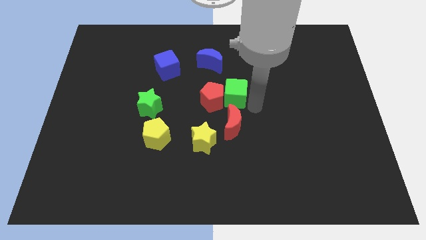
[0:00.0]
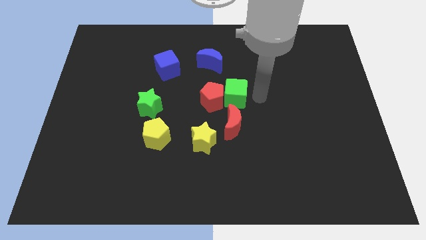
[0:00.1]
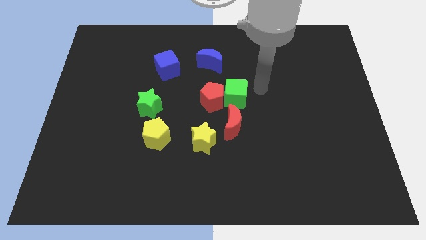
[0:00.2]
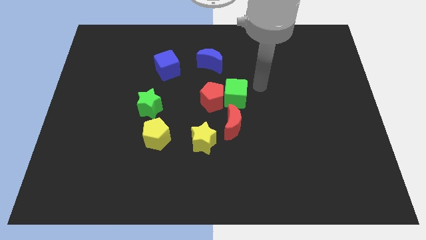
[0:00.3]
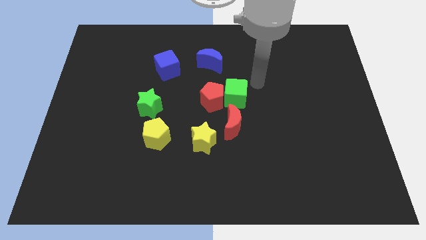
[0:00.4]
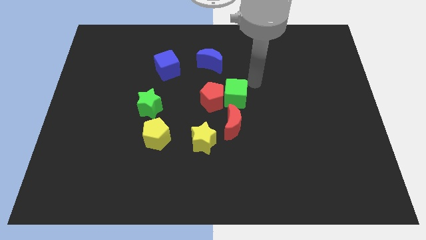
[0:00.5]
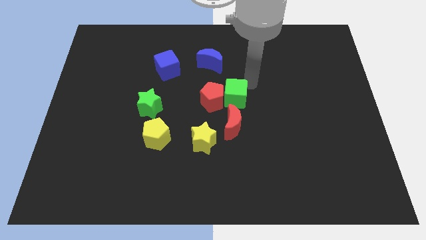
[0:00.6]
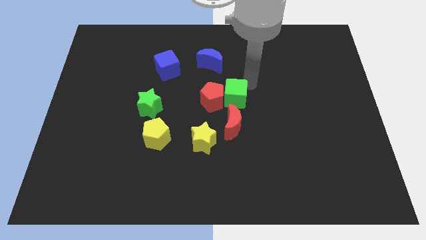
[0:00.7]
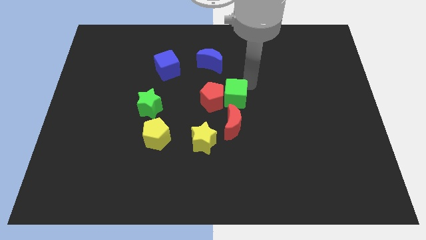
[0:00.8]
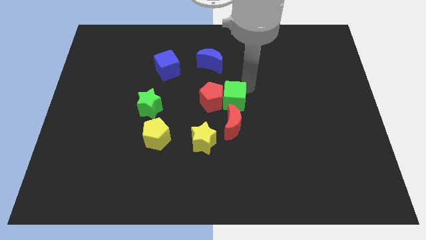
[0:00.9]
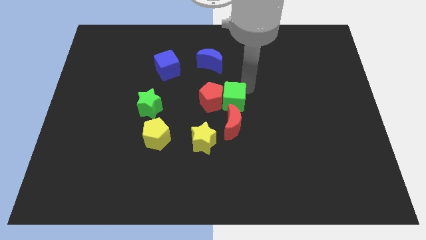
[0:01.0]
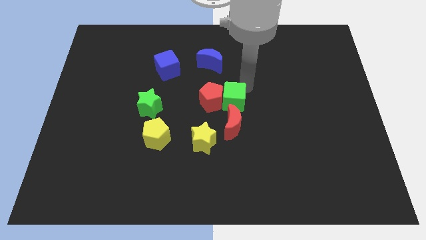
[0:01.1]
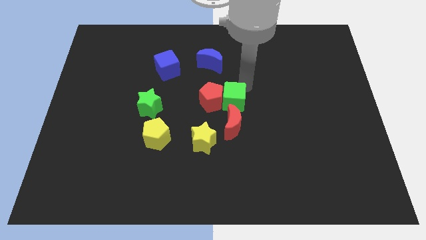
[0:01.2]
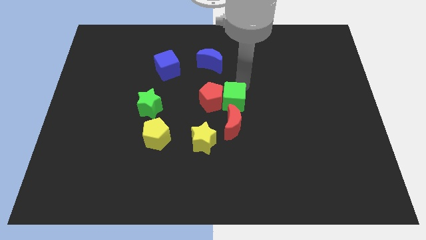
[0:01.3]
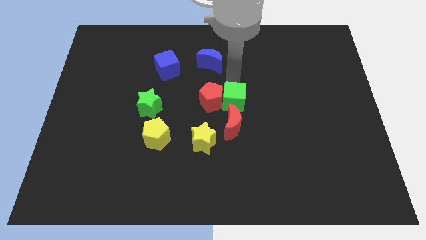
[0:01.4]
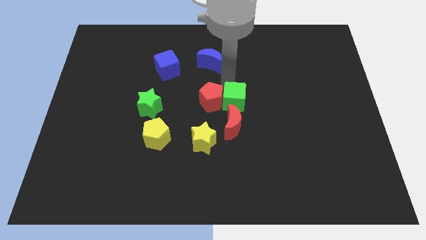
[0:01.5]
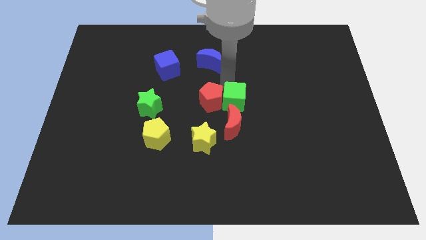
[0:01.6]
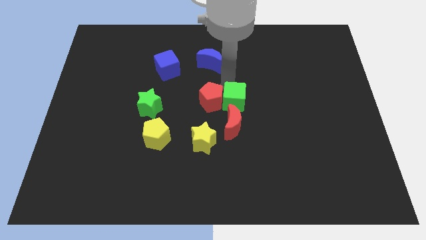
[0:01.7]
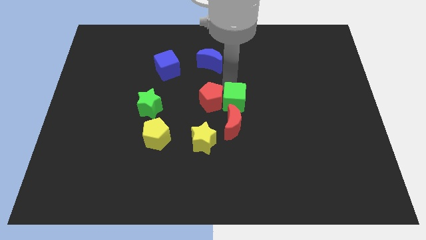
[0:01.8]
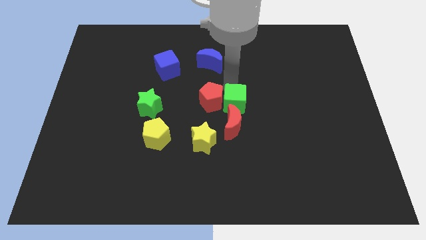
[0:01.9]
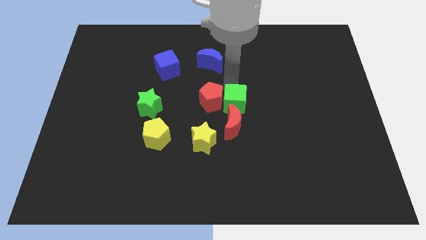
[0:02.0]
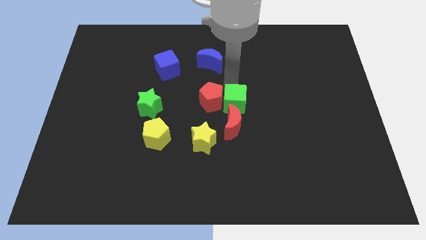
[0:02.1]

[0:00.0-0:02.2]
move the green cube closer to the red moon

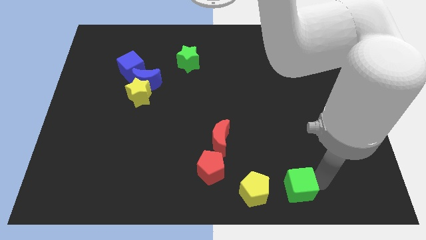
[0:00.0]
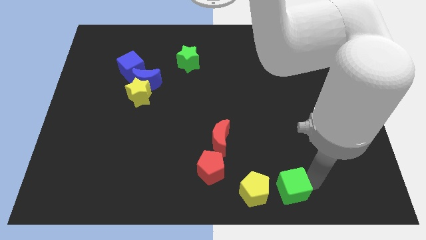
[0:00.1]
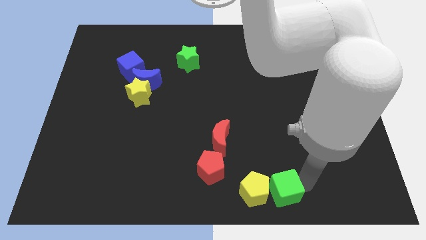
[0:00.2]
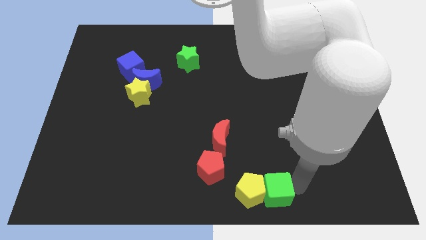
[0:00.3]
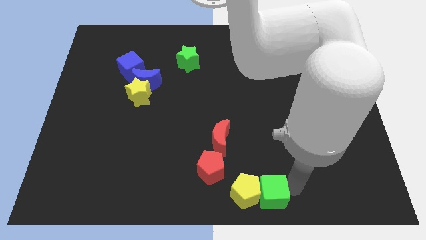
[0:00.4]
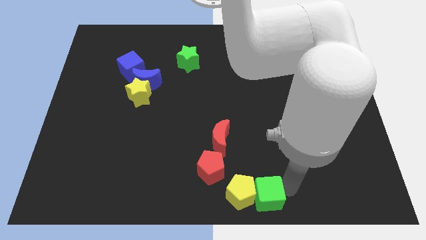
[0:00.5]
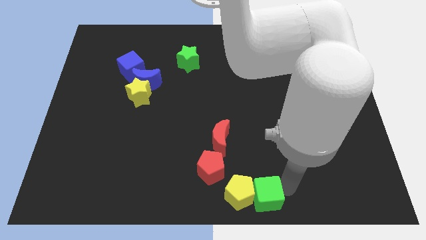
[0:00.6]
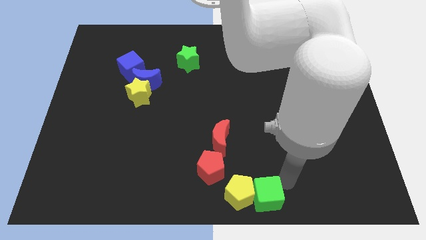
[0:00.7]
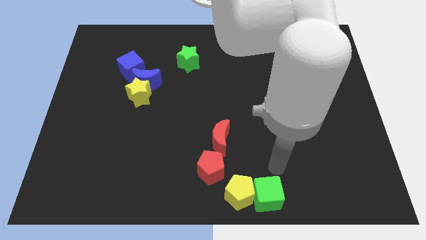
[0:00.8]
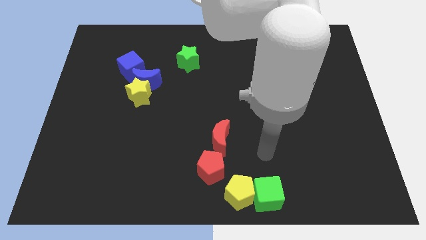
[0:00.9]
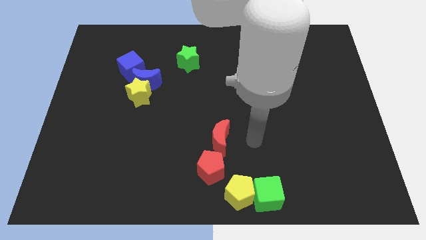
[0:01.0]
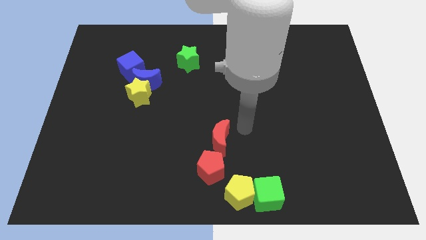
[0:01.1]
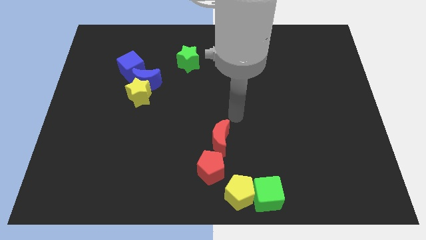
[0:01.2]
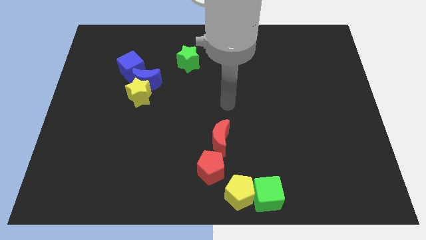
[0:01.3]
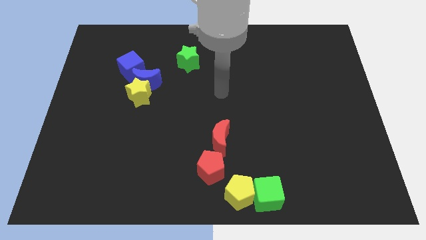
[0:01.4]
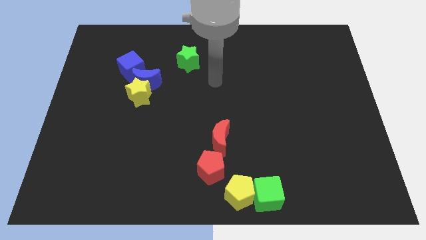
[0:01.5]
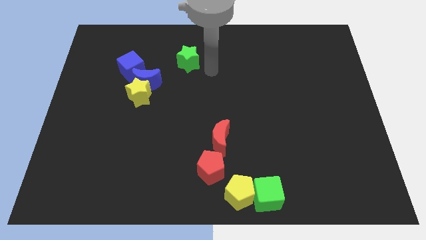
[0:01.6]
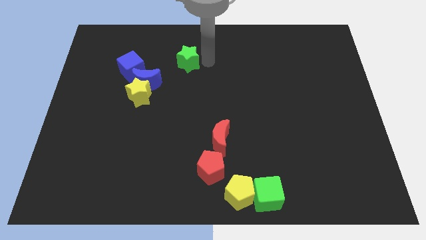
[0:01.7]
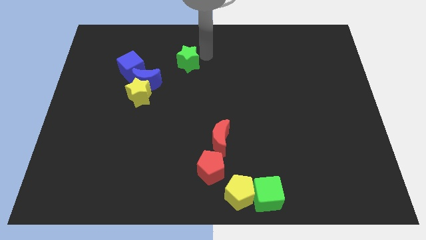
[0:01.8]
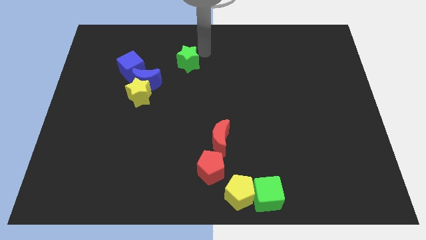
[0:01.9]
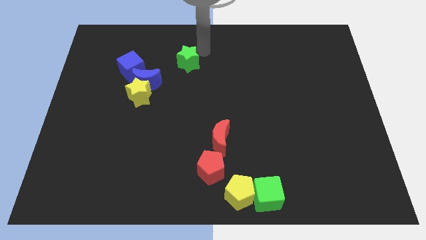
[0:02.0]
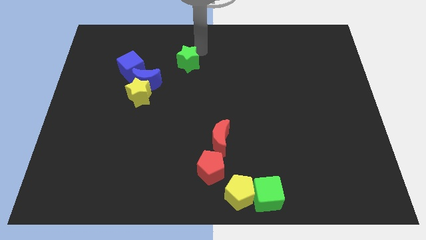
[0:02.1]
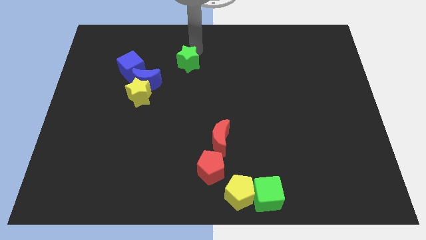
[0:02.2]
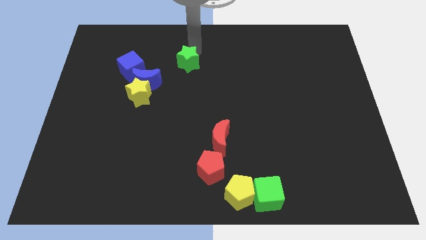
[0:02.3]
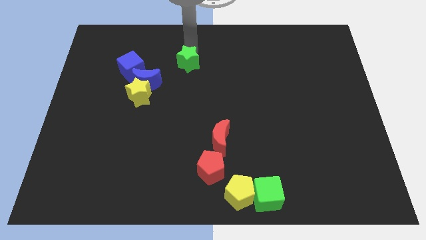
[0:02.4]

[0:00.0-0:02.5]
place your arm to the top of green star

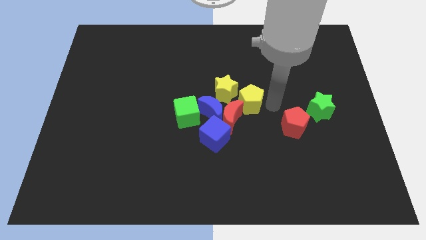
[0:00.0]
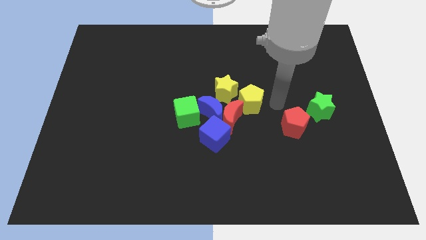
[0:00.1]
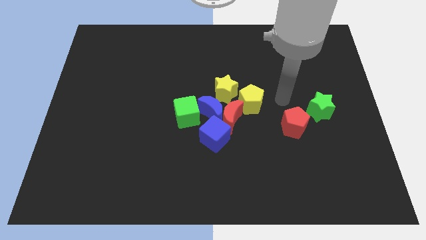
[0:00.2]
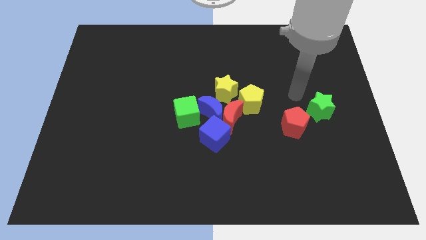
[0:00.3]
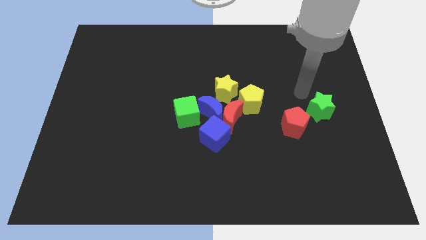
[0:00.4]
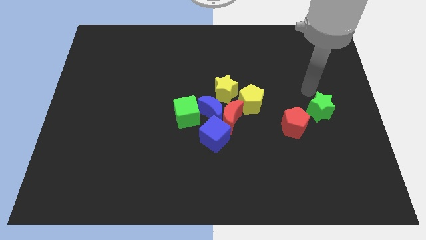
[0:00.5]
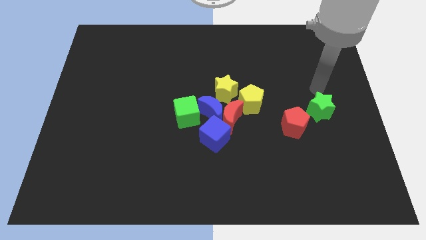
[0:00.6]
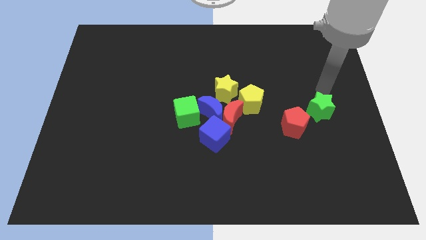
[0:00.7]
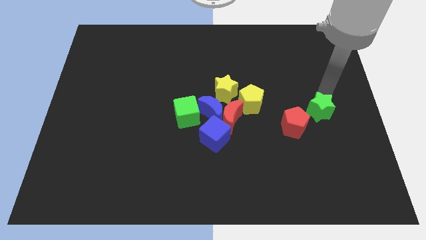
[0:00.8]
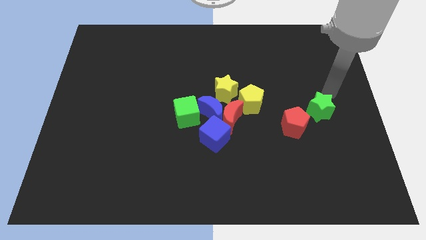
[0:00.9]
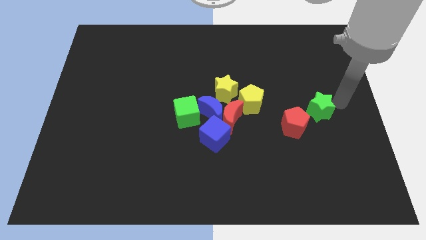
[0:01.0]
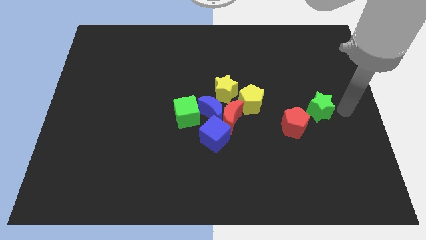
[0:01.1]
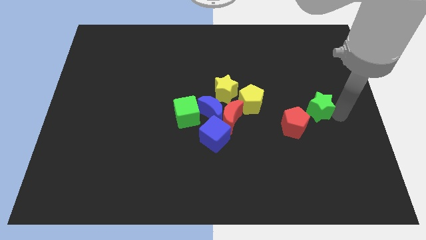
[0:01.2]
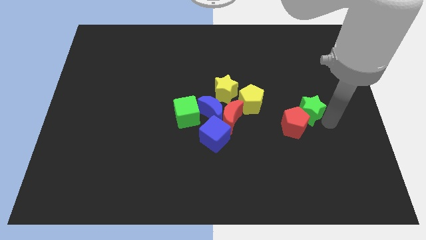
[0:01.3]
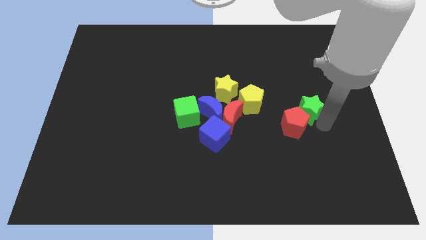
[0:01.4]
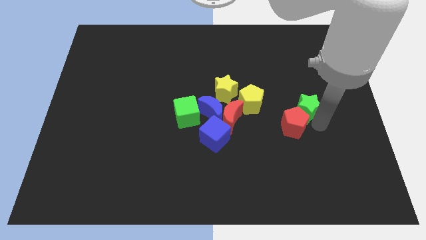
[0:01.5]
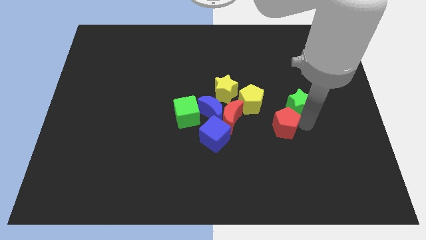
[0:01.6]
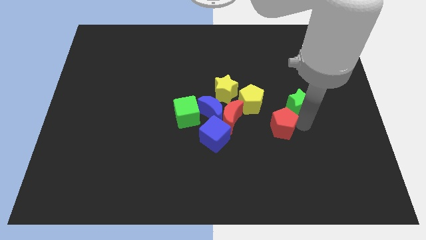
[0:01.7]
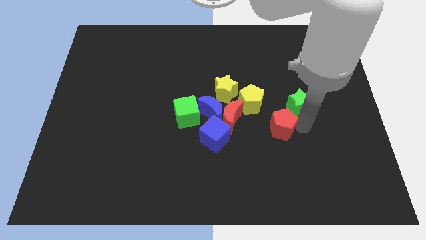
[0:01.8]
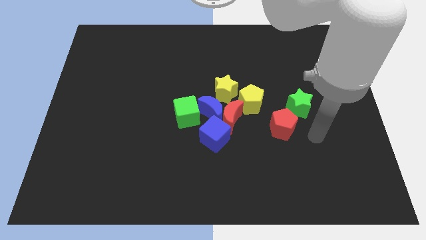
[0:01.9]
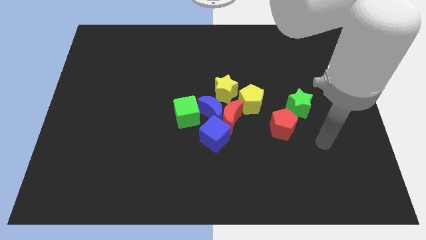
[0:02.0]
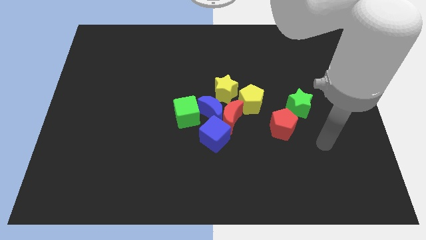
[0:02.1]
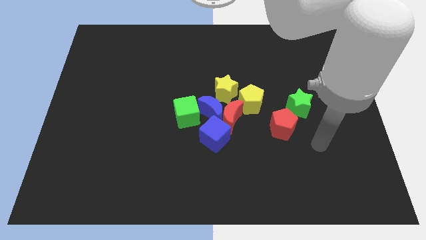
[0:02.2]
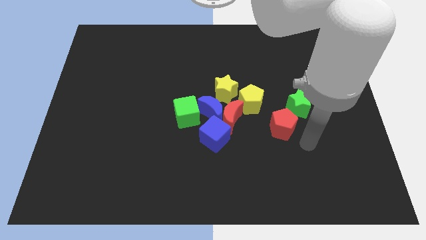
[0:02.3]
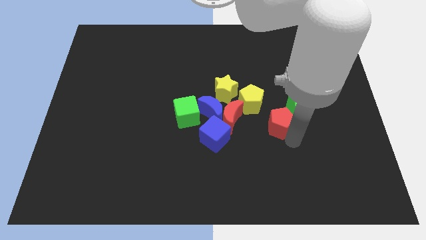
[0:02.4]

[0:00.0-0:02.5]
move the green star and the red pentagon to the left of the board

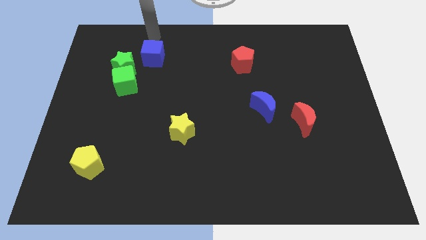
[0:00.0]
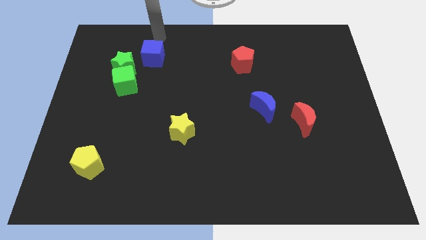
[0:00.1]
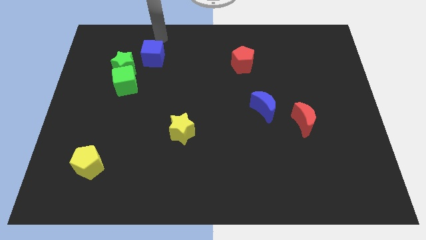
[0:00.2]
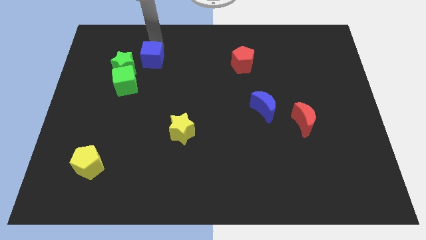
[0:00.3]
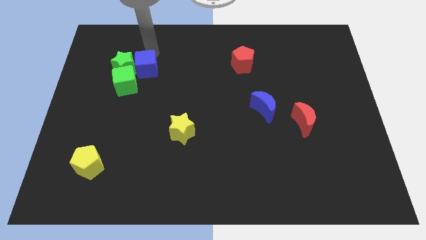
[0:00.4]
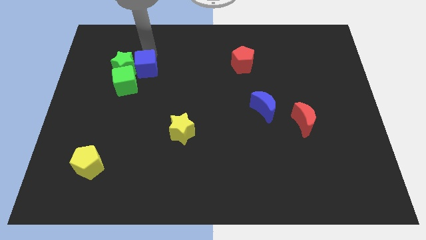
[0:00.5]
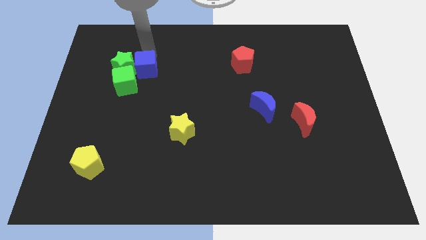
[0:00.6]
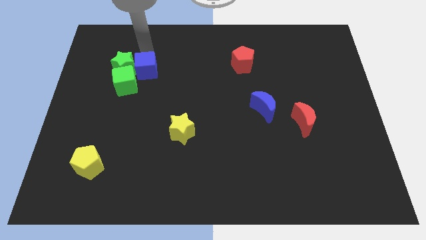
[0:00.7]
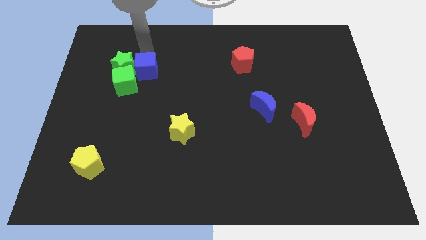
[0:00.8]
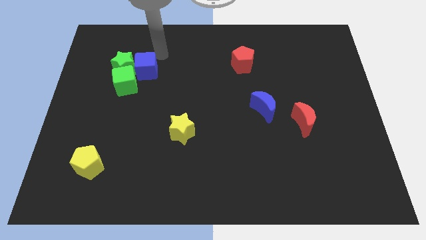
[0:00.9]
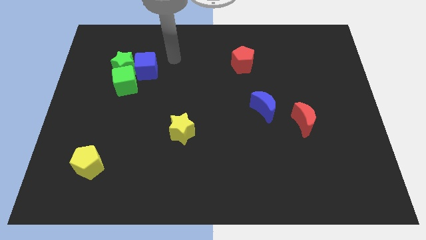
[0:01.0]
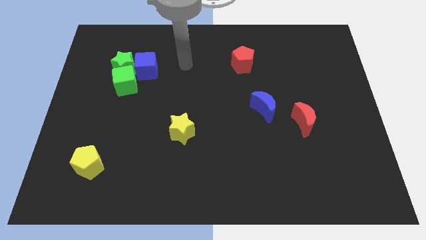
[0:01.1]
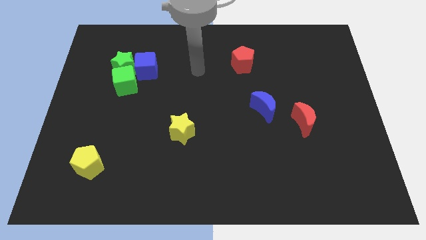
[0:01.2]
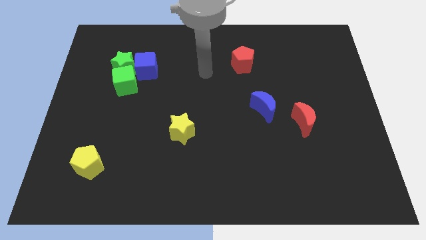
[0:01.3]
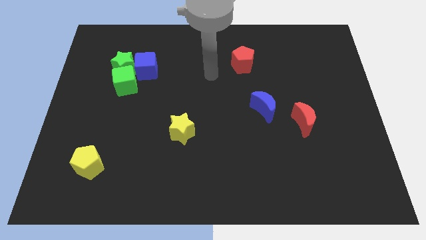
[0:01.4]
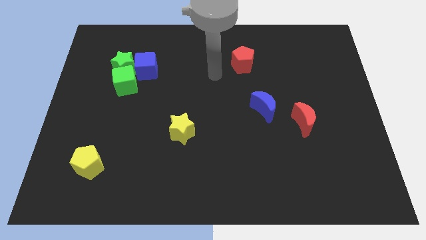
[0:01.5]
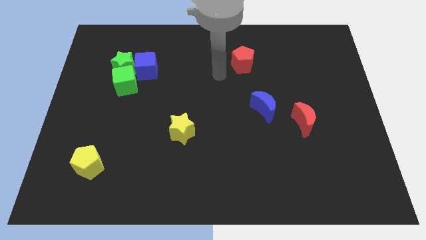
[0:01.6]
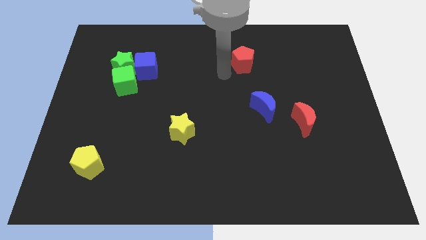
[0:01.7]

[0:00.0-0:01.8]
move the blue cube to the right of the green star
